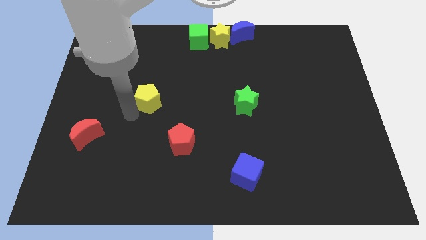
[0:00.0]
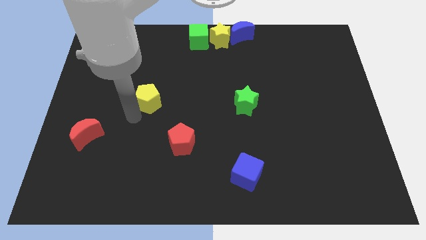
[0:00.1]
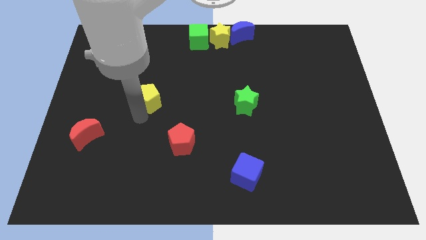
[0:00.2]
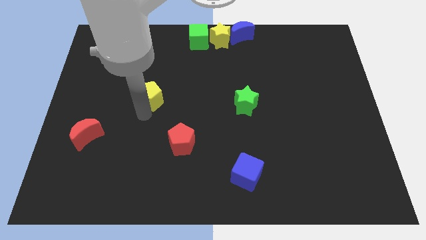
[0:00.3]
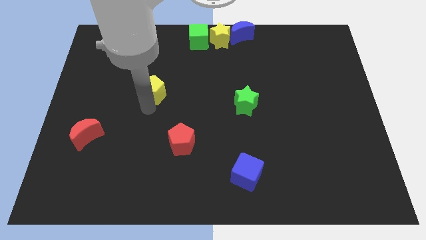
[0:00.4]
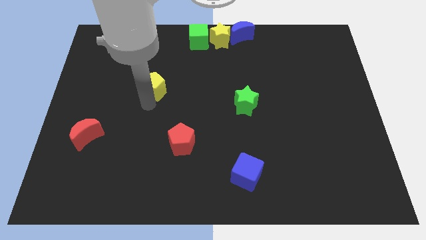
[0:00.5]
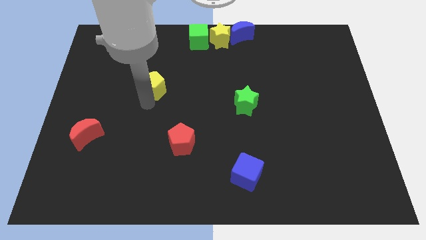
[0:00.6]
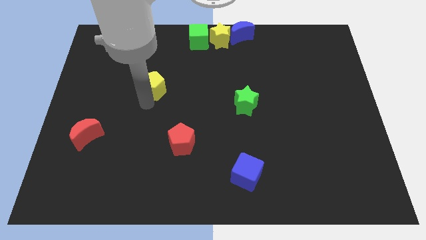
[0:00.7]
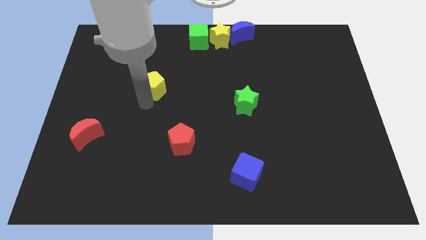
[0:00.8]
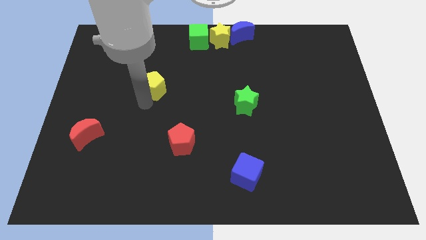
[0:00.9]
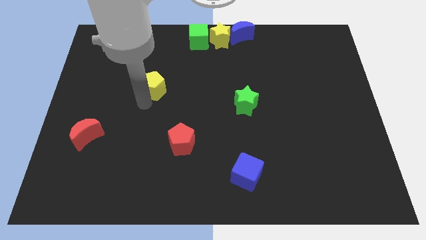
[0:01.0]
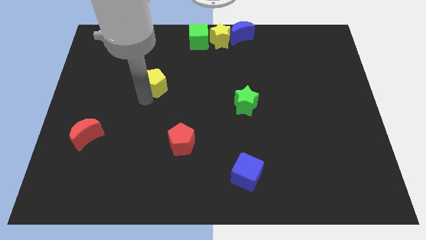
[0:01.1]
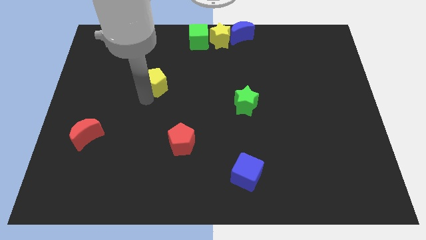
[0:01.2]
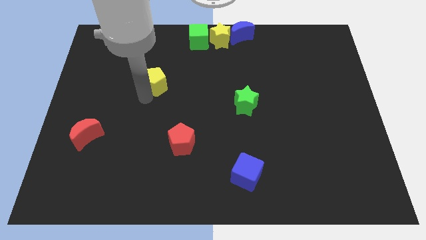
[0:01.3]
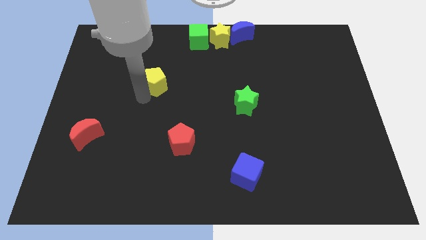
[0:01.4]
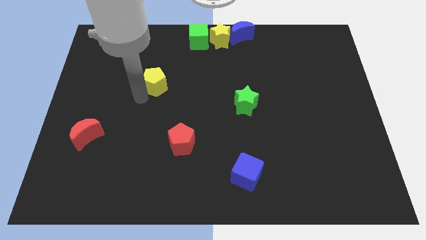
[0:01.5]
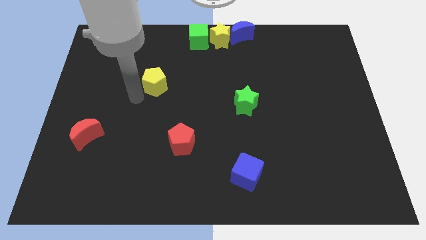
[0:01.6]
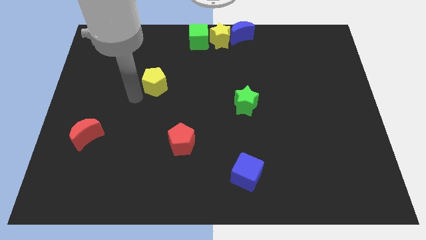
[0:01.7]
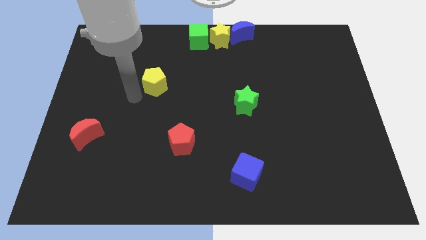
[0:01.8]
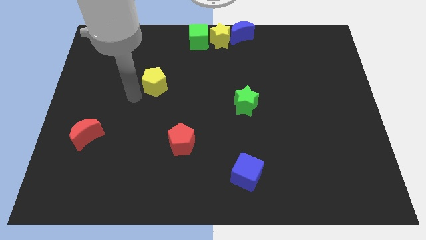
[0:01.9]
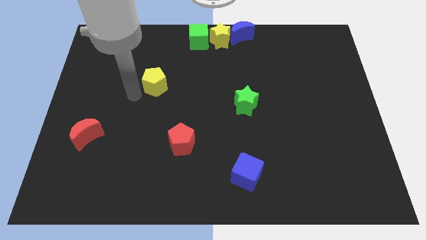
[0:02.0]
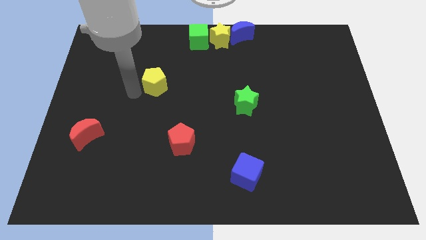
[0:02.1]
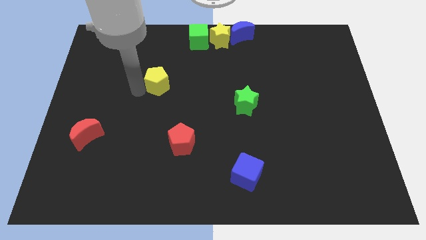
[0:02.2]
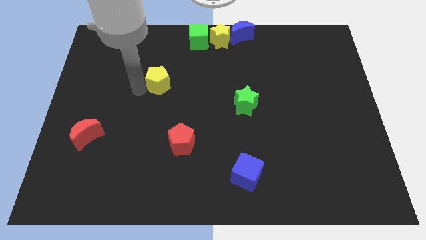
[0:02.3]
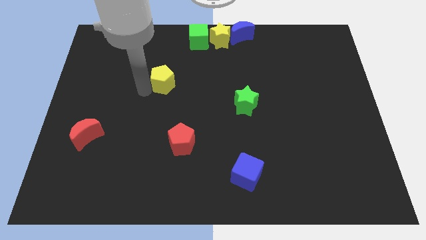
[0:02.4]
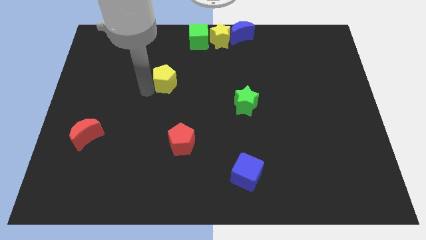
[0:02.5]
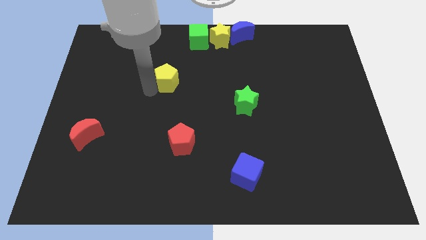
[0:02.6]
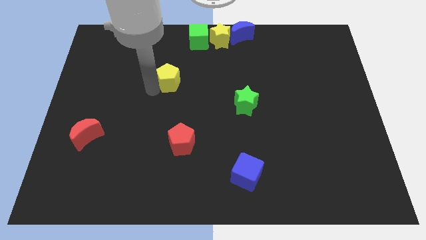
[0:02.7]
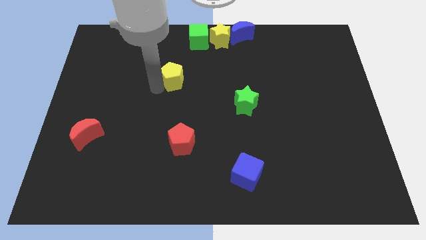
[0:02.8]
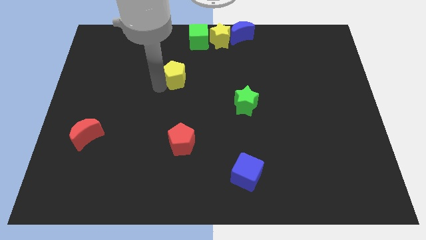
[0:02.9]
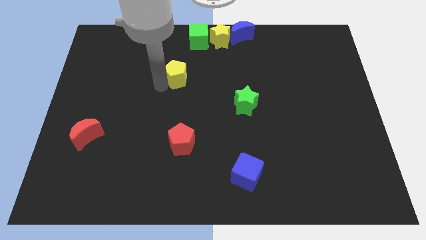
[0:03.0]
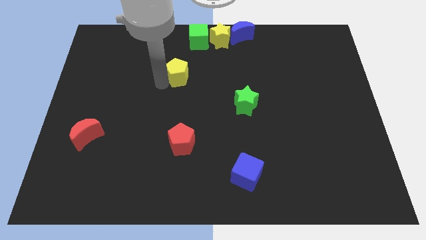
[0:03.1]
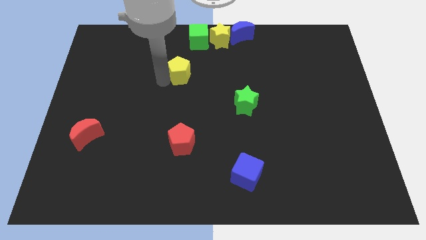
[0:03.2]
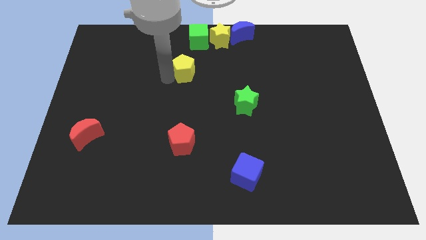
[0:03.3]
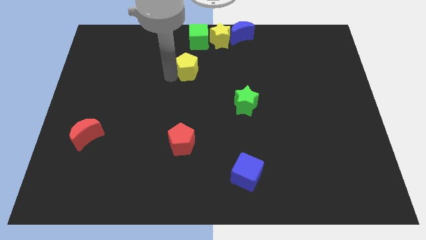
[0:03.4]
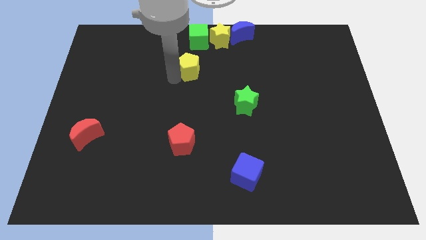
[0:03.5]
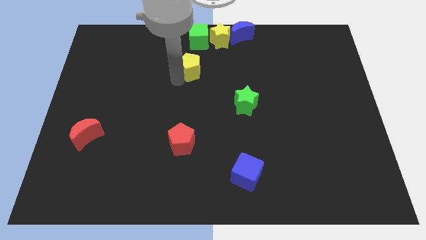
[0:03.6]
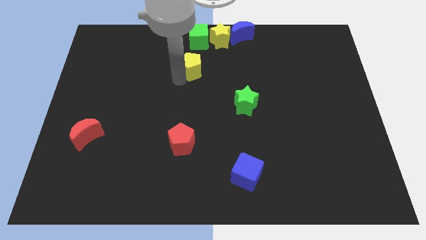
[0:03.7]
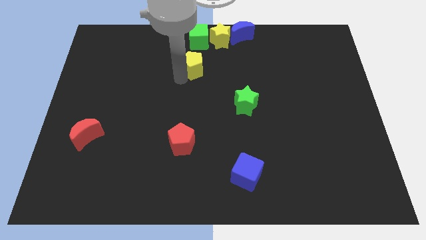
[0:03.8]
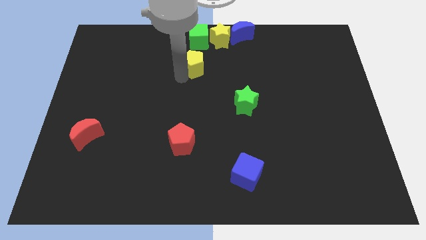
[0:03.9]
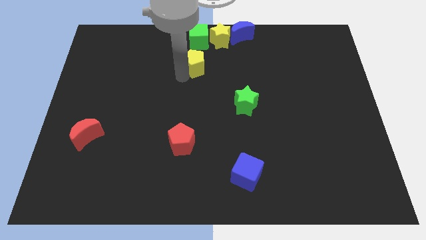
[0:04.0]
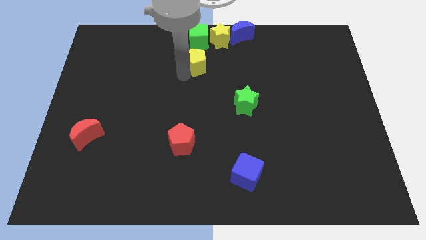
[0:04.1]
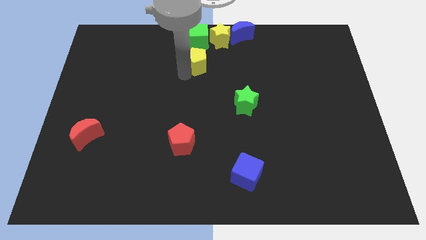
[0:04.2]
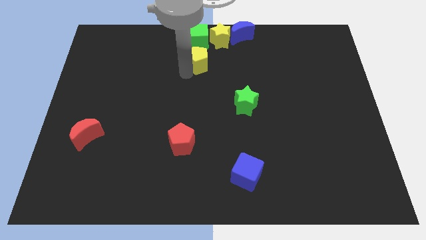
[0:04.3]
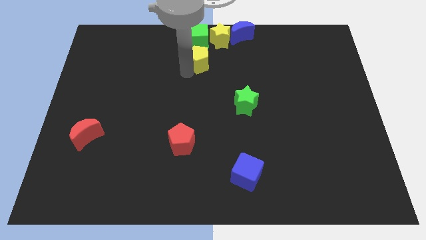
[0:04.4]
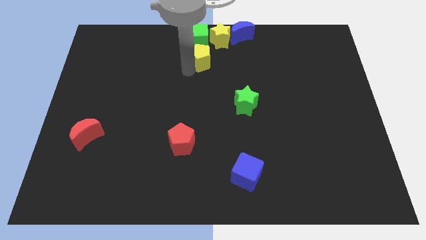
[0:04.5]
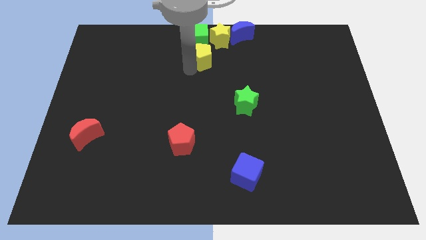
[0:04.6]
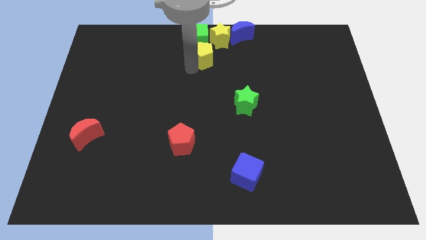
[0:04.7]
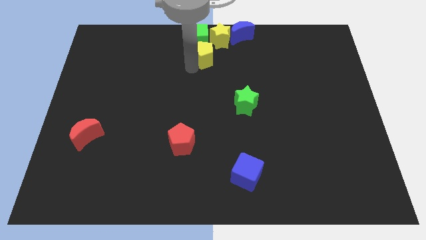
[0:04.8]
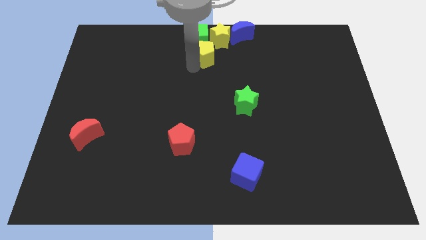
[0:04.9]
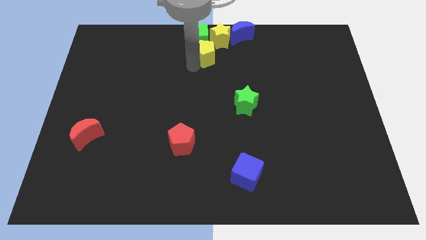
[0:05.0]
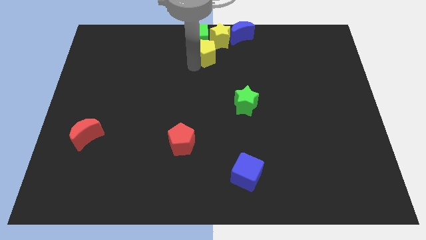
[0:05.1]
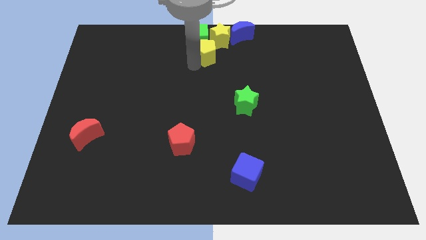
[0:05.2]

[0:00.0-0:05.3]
move the yellow pentagon towards the yellow star

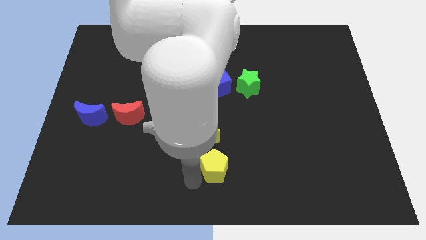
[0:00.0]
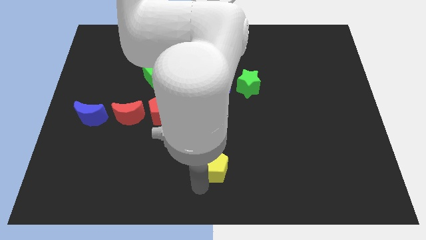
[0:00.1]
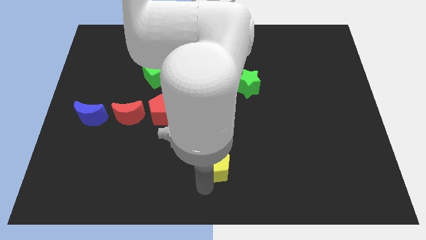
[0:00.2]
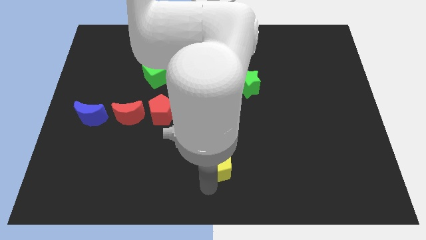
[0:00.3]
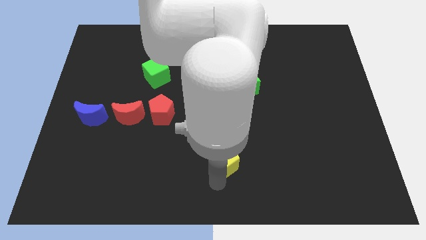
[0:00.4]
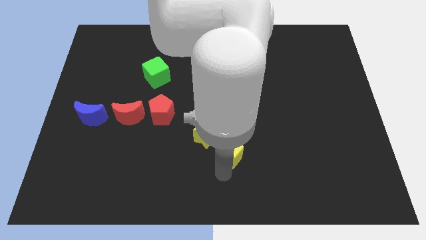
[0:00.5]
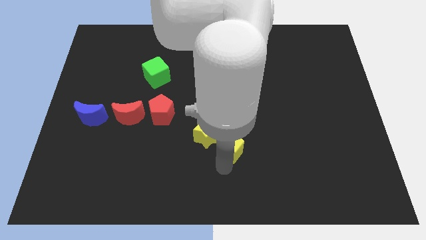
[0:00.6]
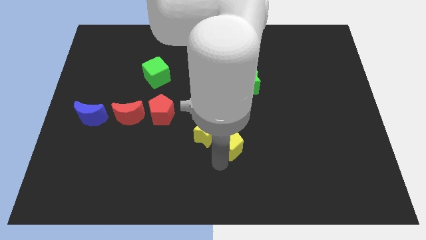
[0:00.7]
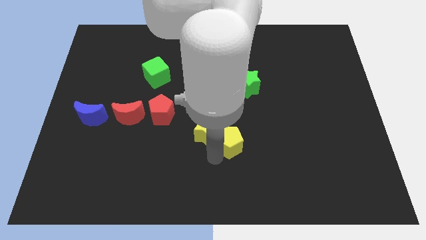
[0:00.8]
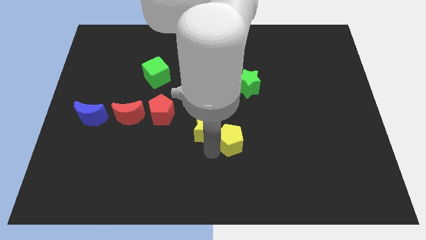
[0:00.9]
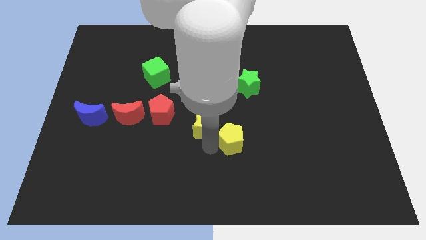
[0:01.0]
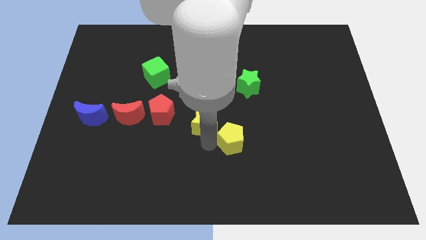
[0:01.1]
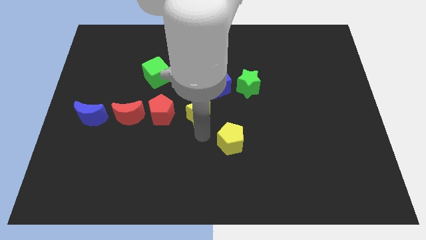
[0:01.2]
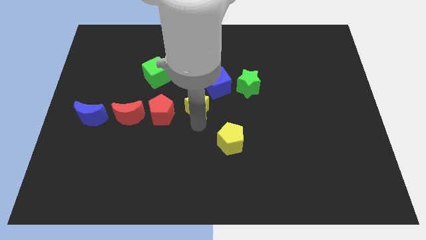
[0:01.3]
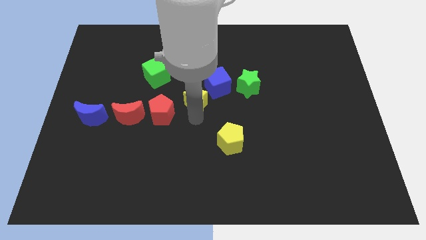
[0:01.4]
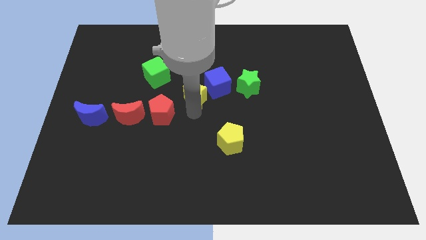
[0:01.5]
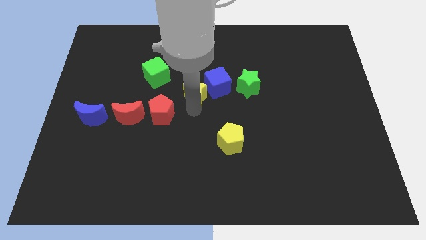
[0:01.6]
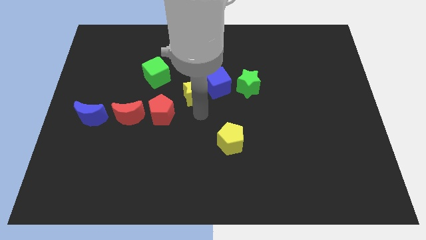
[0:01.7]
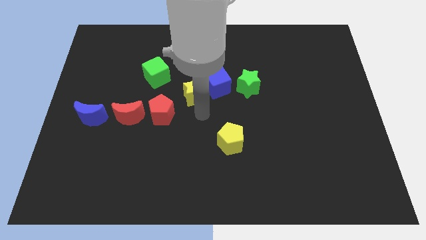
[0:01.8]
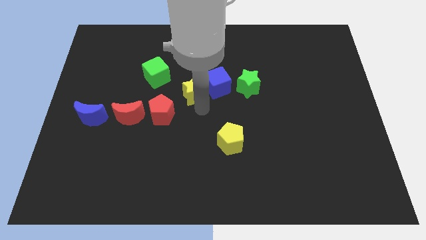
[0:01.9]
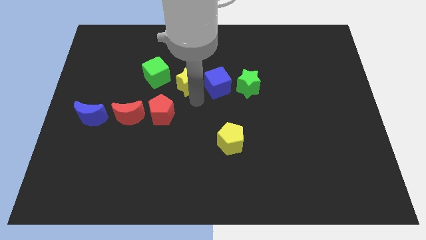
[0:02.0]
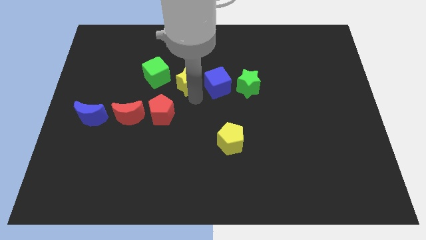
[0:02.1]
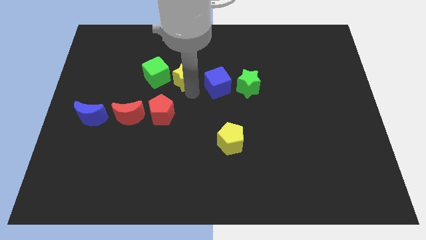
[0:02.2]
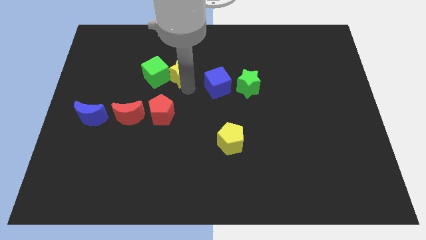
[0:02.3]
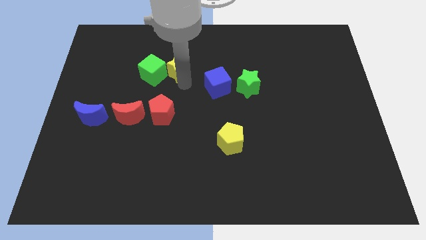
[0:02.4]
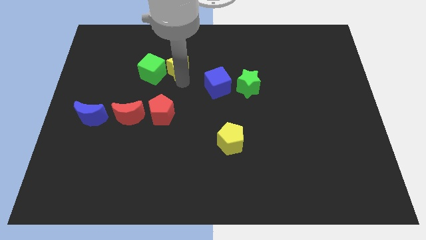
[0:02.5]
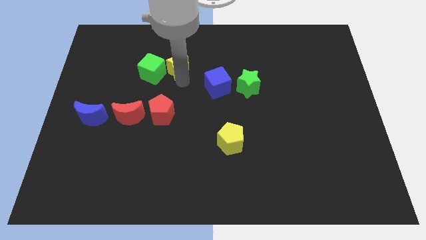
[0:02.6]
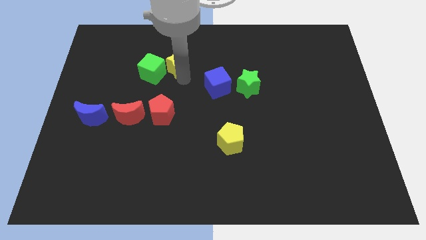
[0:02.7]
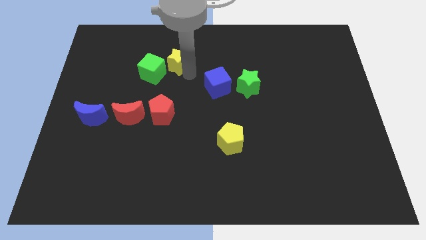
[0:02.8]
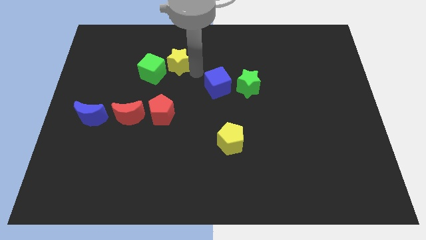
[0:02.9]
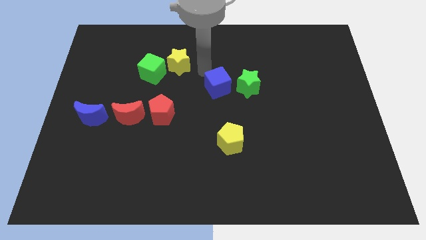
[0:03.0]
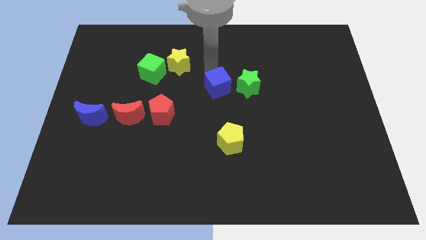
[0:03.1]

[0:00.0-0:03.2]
push the yellow star towards the center of the board

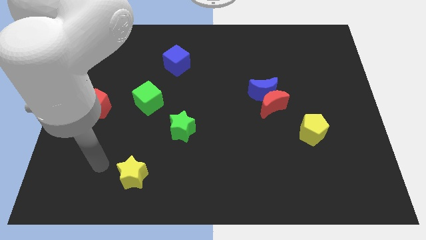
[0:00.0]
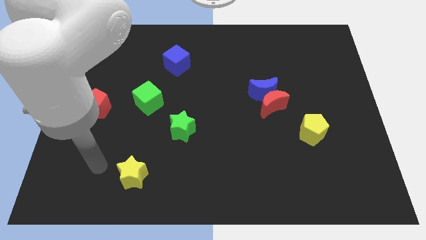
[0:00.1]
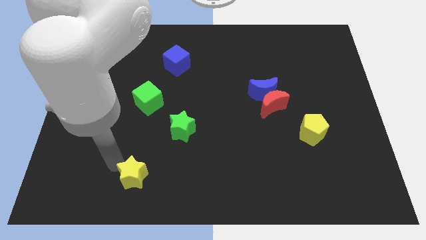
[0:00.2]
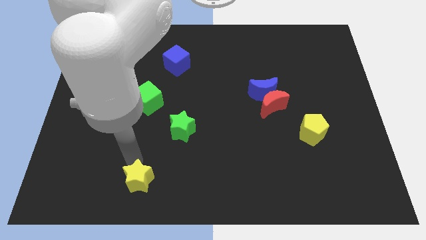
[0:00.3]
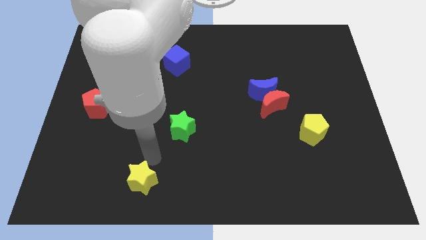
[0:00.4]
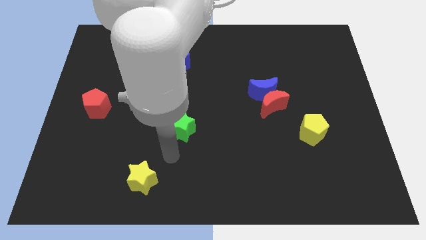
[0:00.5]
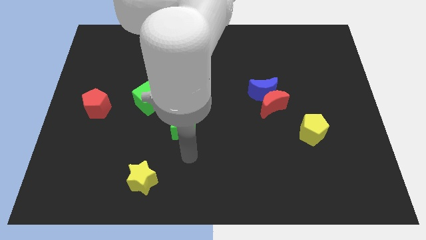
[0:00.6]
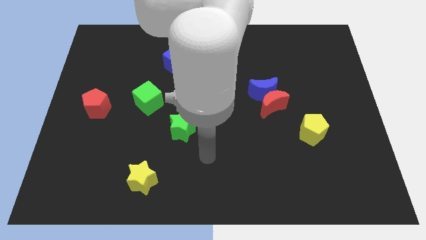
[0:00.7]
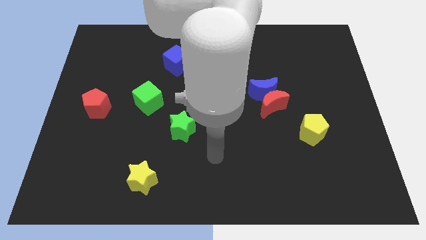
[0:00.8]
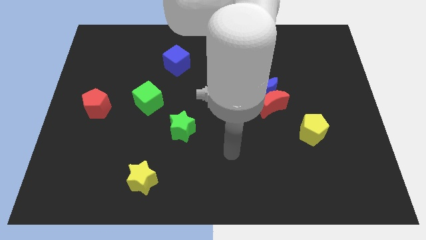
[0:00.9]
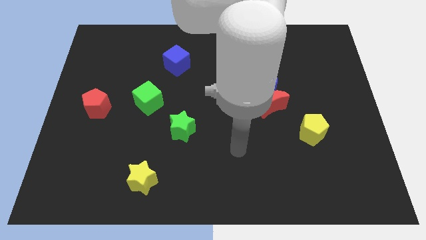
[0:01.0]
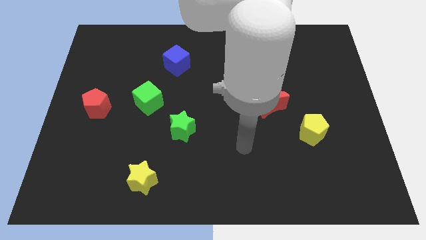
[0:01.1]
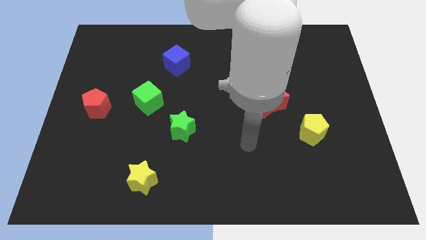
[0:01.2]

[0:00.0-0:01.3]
touch the yellow star
